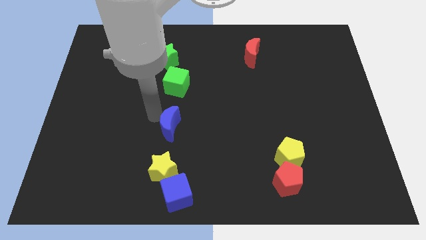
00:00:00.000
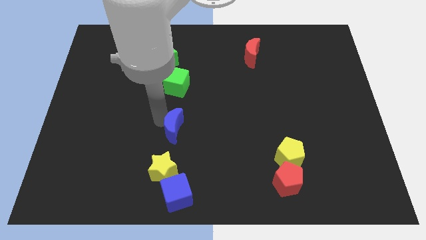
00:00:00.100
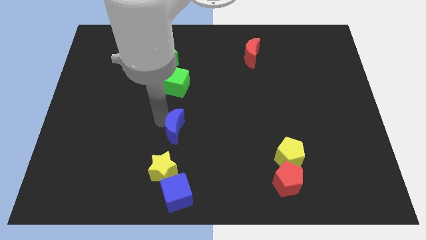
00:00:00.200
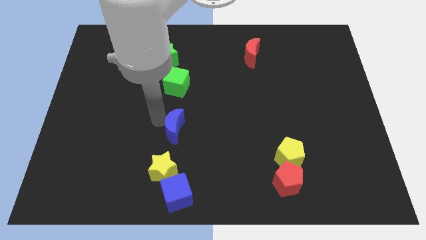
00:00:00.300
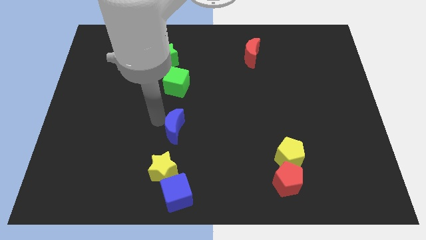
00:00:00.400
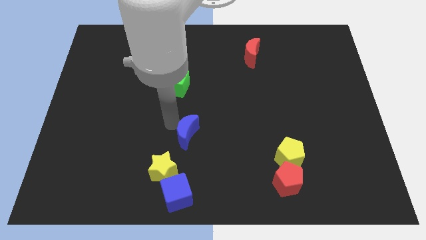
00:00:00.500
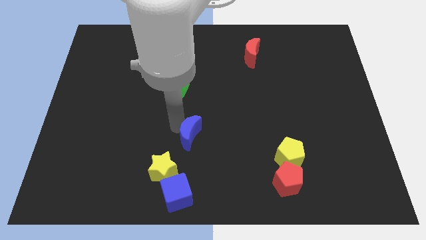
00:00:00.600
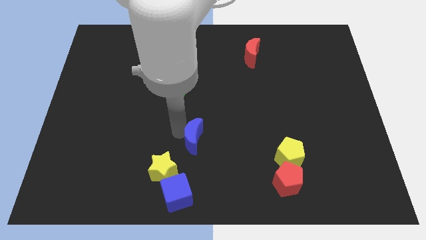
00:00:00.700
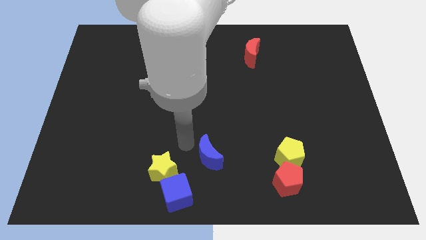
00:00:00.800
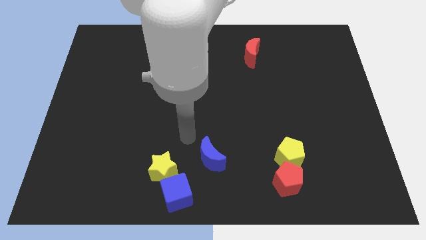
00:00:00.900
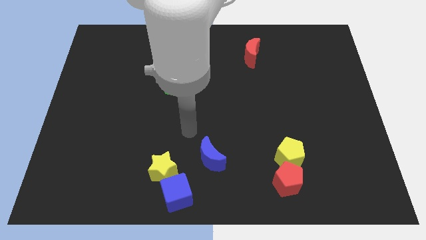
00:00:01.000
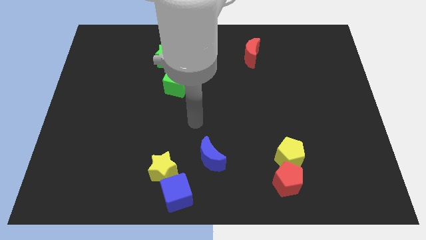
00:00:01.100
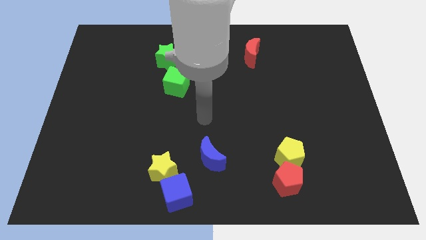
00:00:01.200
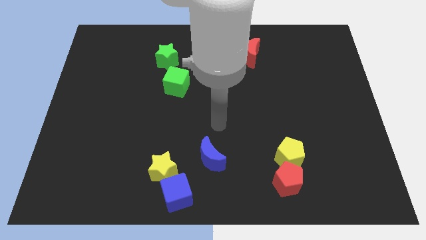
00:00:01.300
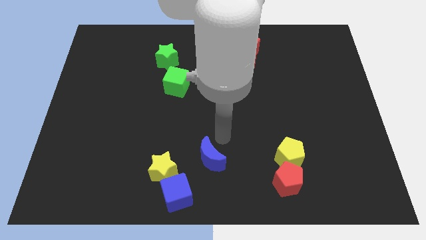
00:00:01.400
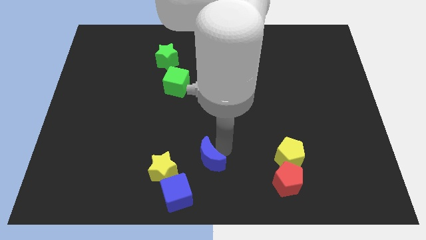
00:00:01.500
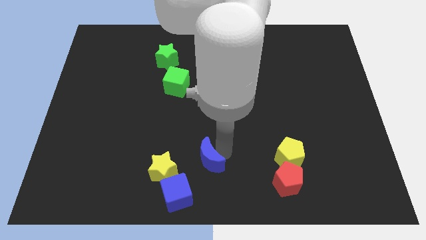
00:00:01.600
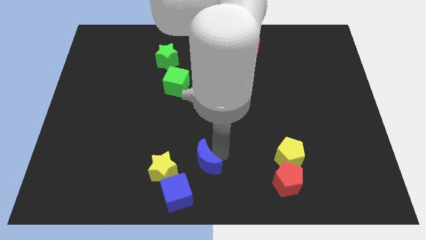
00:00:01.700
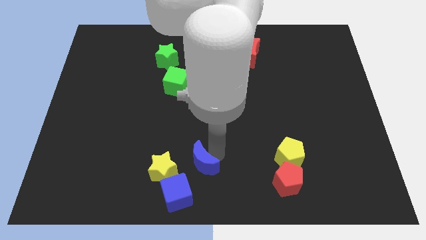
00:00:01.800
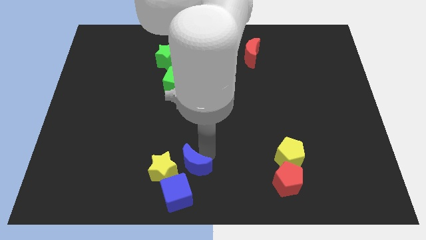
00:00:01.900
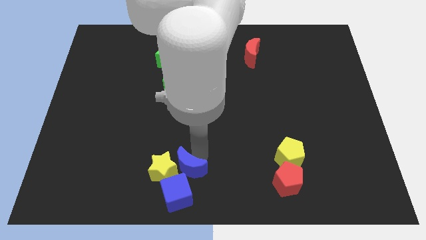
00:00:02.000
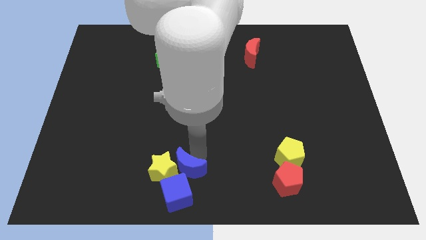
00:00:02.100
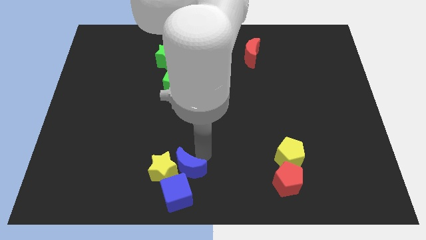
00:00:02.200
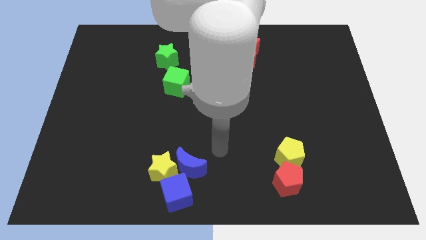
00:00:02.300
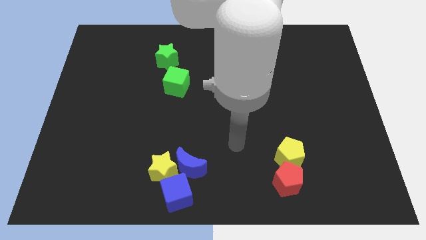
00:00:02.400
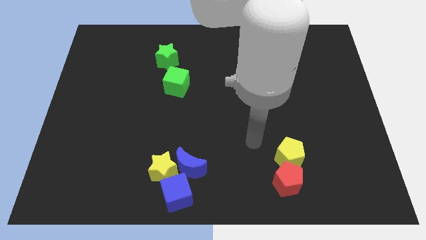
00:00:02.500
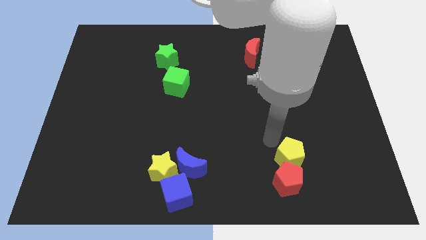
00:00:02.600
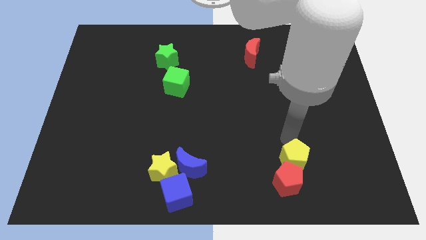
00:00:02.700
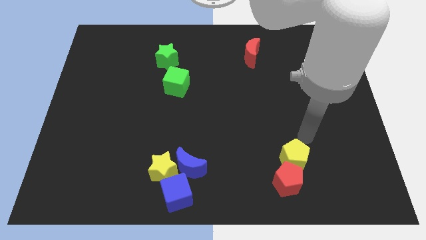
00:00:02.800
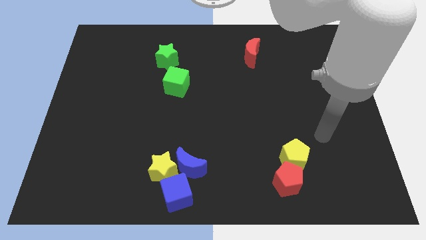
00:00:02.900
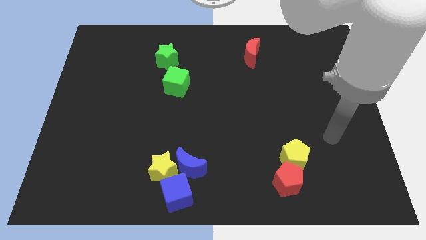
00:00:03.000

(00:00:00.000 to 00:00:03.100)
move the blue moon to the right of the yellow star

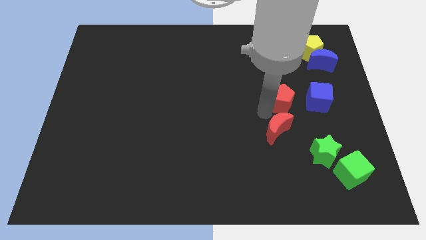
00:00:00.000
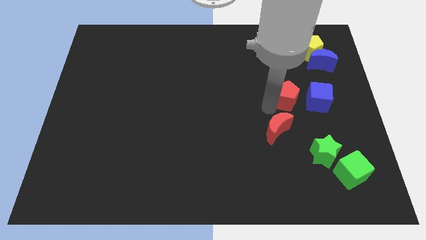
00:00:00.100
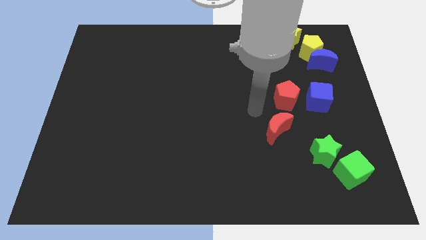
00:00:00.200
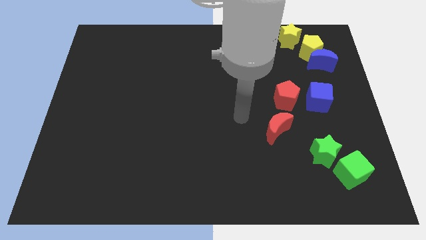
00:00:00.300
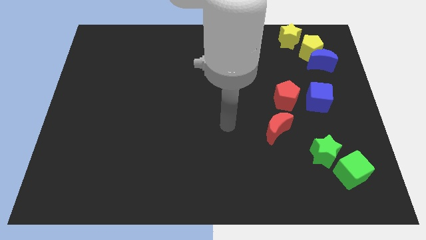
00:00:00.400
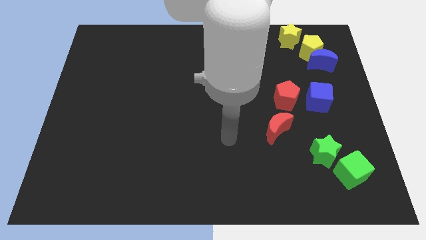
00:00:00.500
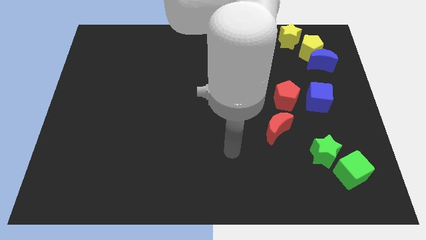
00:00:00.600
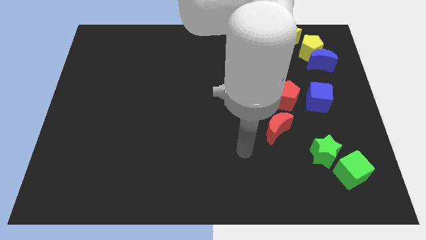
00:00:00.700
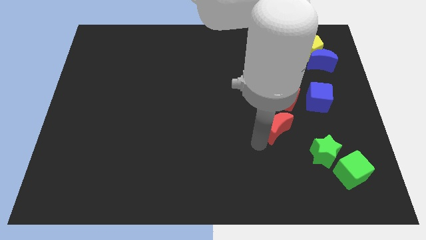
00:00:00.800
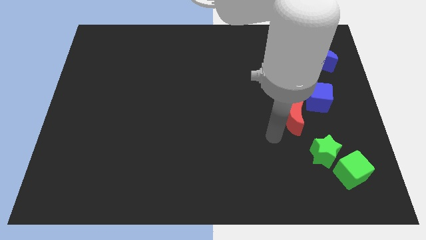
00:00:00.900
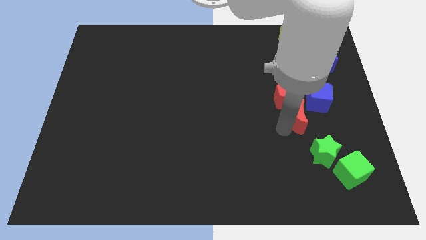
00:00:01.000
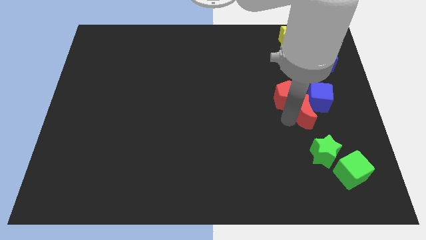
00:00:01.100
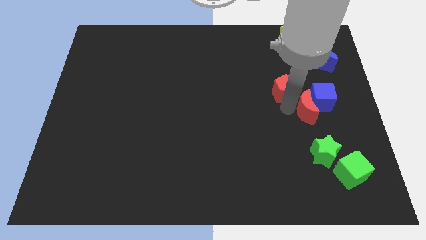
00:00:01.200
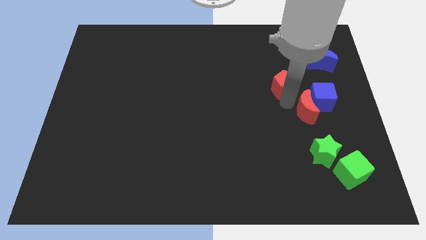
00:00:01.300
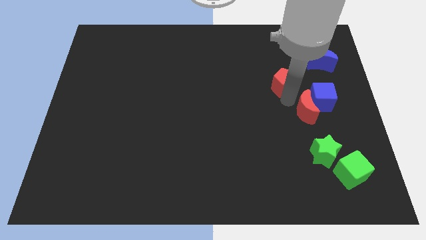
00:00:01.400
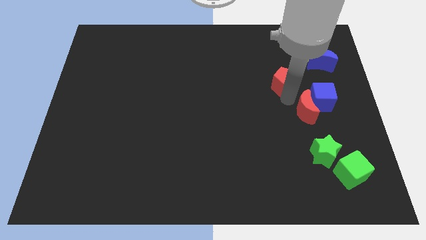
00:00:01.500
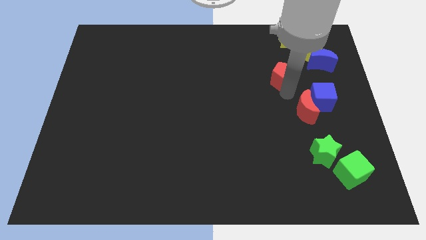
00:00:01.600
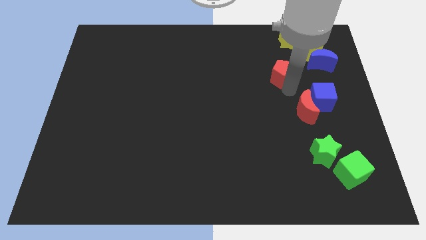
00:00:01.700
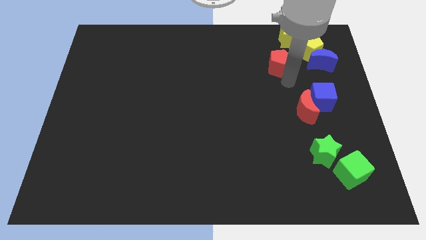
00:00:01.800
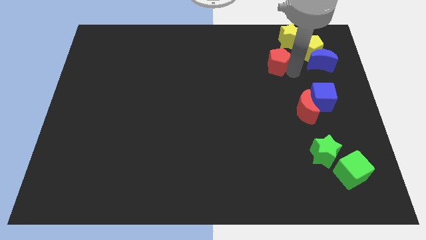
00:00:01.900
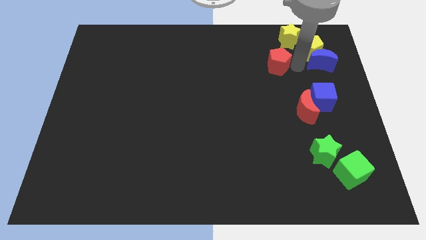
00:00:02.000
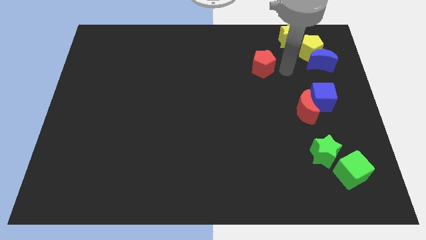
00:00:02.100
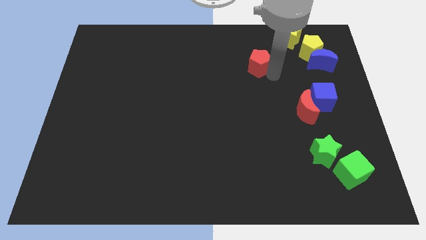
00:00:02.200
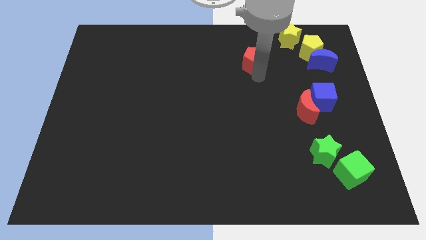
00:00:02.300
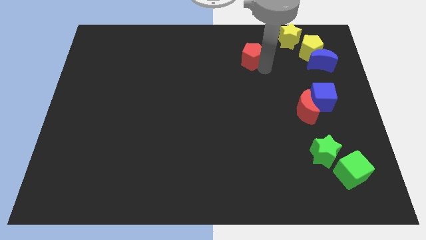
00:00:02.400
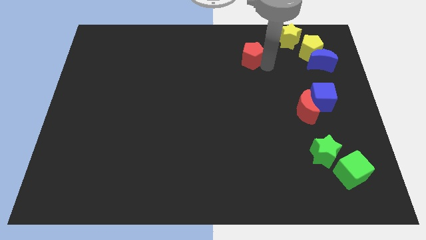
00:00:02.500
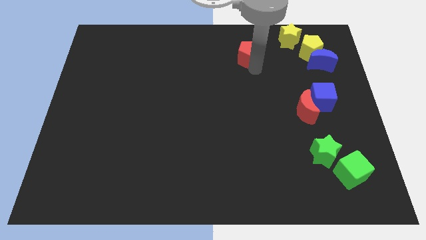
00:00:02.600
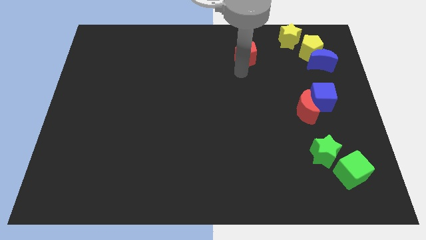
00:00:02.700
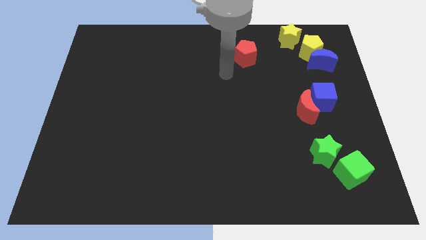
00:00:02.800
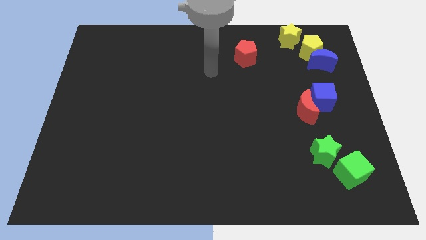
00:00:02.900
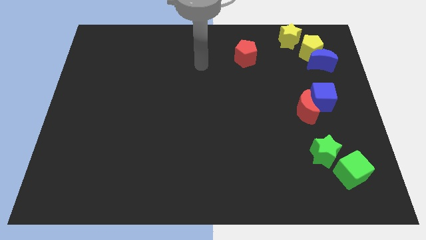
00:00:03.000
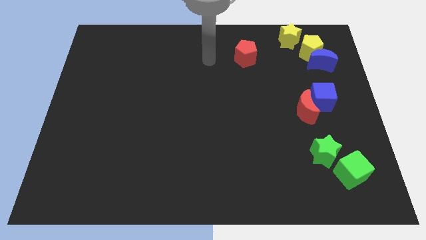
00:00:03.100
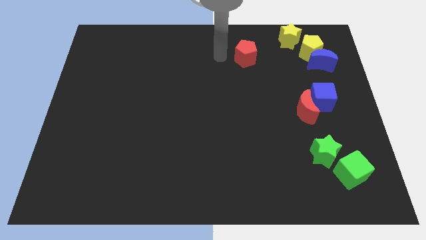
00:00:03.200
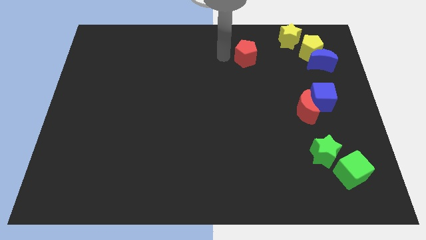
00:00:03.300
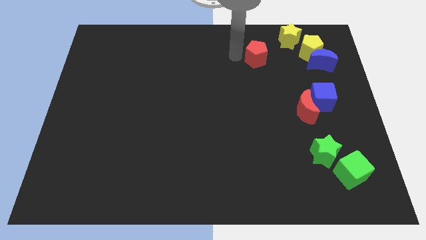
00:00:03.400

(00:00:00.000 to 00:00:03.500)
slide the red pentagon to the bottom left diagonal of the yellow star

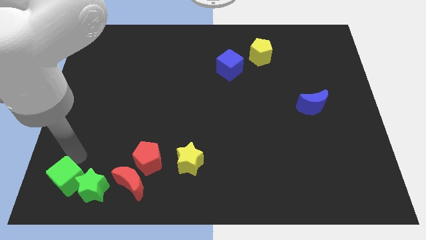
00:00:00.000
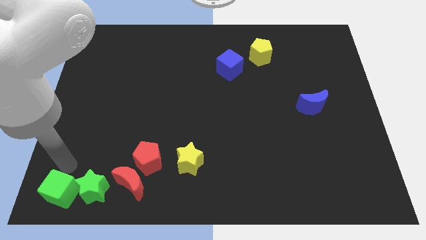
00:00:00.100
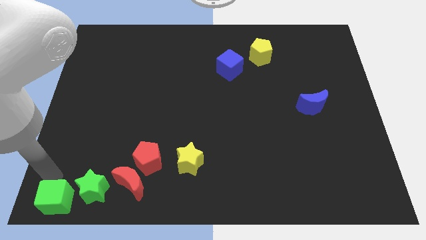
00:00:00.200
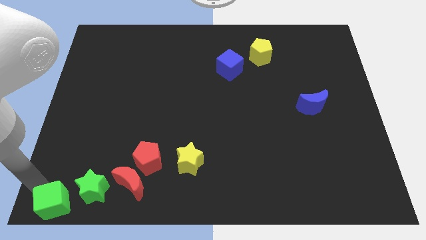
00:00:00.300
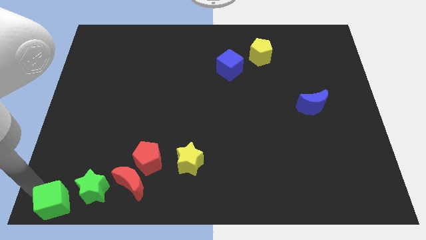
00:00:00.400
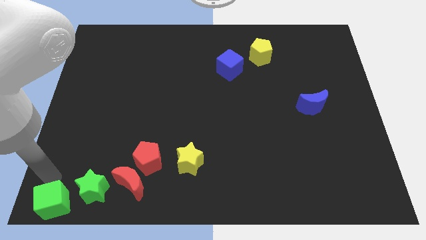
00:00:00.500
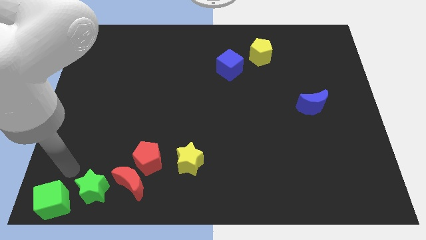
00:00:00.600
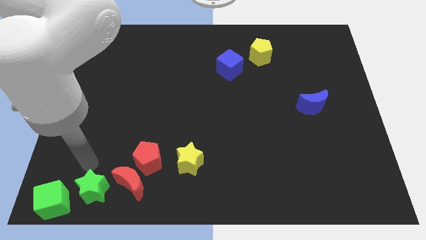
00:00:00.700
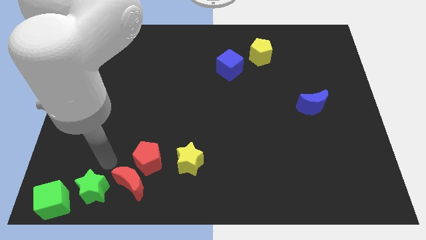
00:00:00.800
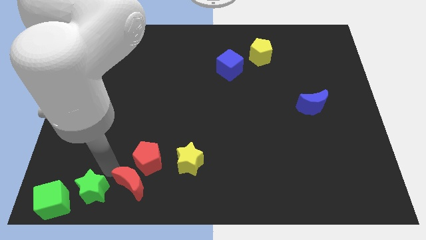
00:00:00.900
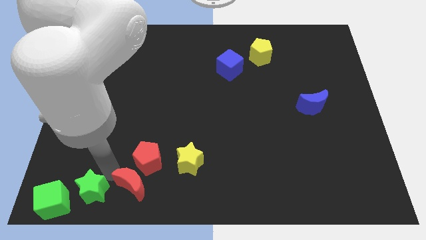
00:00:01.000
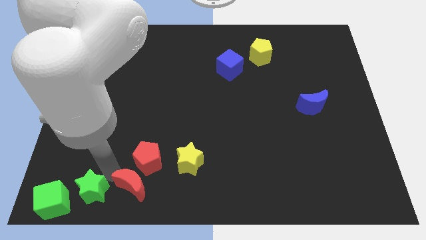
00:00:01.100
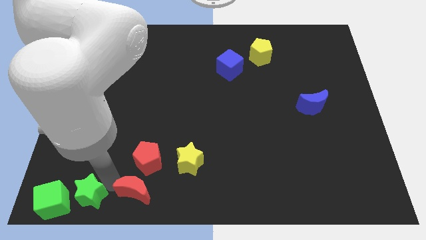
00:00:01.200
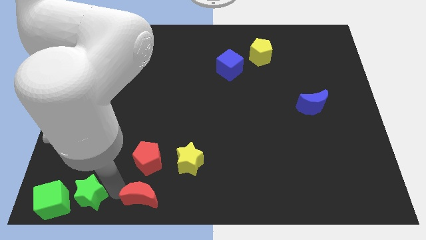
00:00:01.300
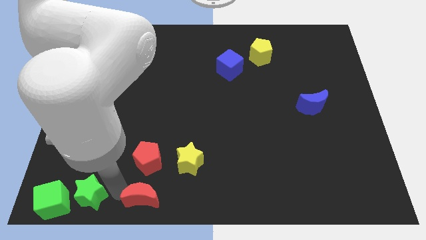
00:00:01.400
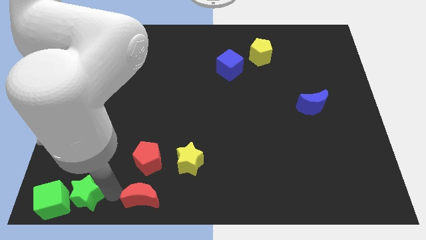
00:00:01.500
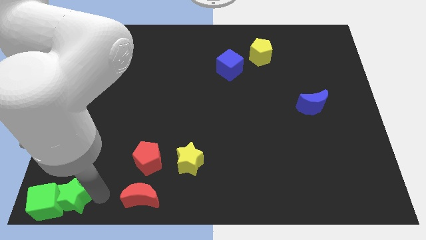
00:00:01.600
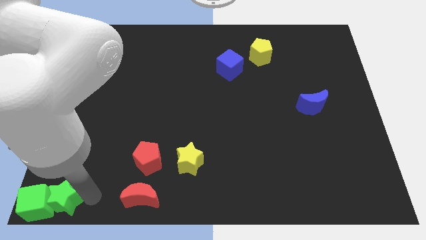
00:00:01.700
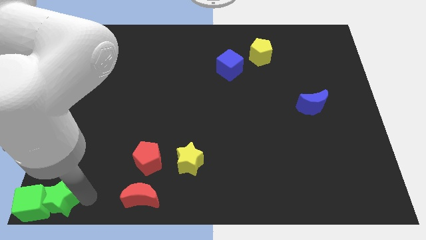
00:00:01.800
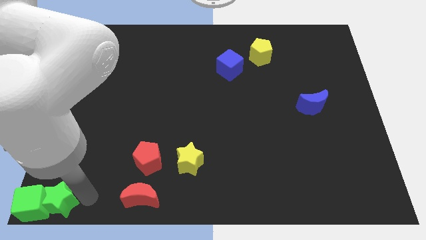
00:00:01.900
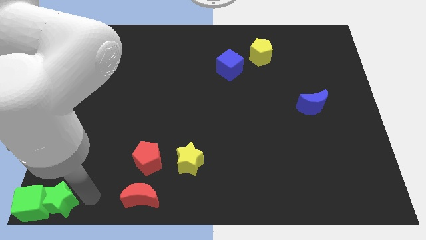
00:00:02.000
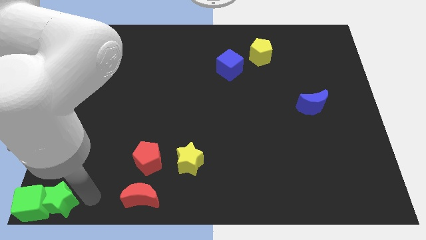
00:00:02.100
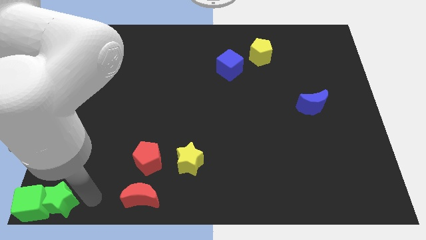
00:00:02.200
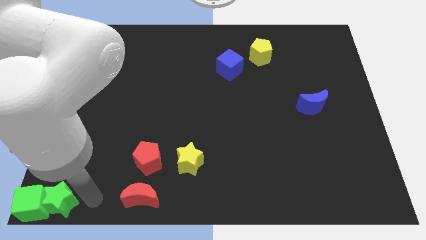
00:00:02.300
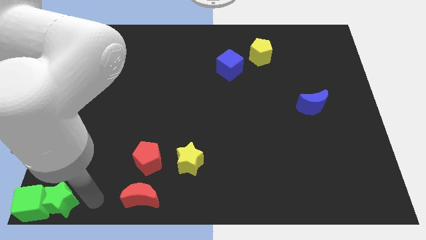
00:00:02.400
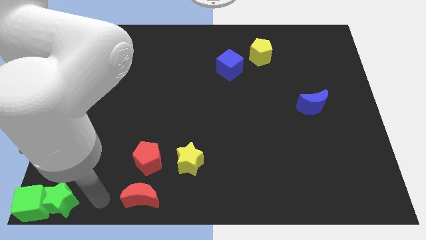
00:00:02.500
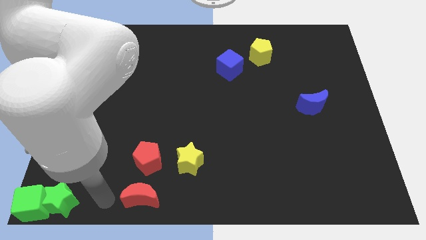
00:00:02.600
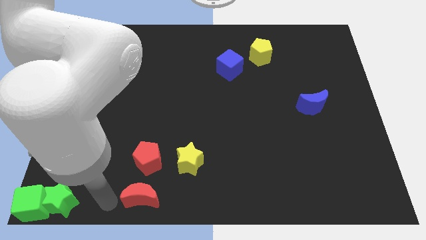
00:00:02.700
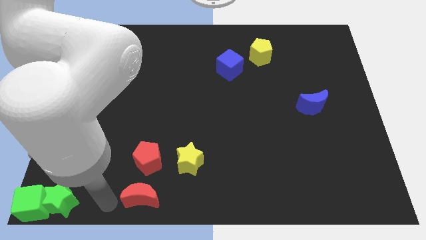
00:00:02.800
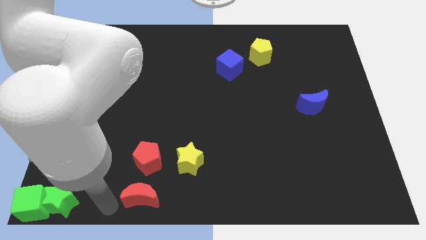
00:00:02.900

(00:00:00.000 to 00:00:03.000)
push the green cube along with green star to the bottom left corner of the board
